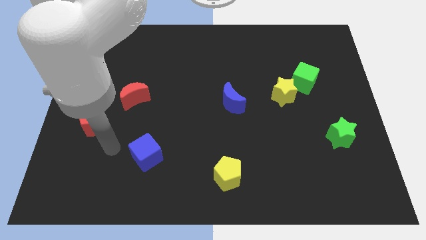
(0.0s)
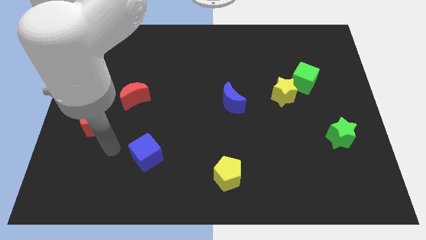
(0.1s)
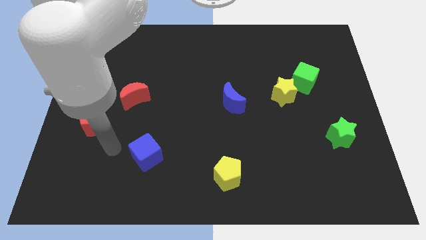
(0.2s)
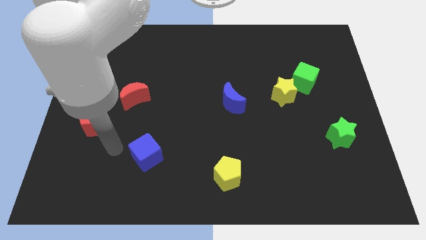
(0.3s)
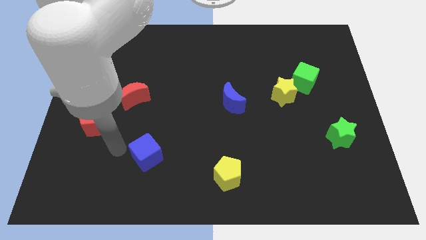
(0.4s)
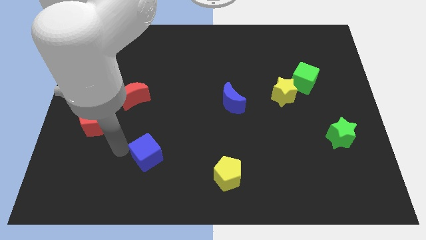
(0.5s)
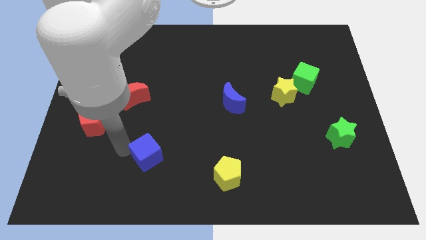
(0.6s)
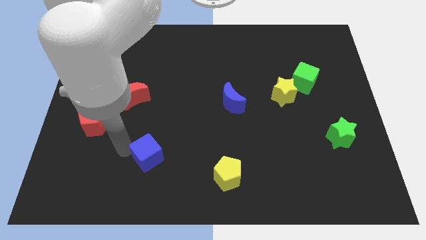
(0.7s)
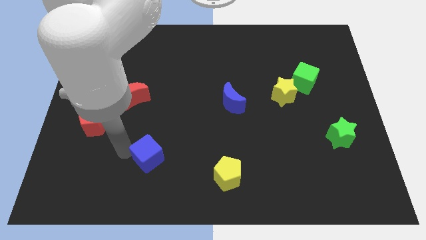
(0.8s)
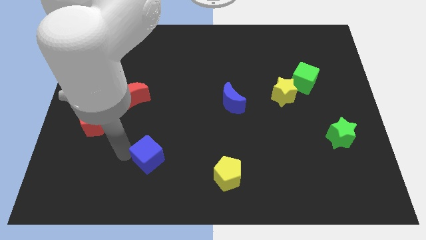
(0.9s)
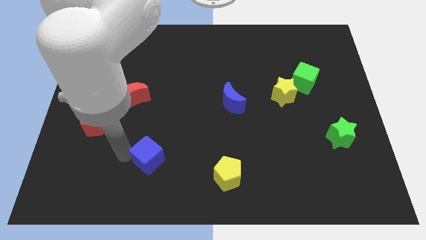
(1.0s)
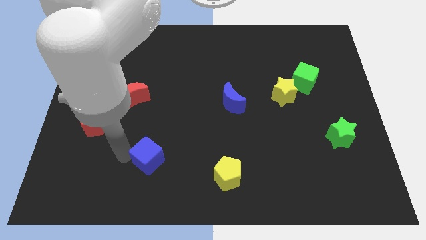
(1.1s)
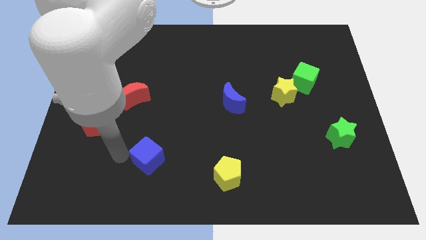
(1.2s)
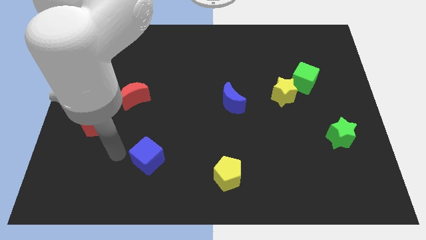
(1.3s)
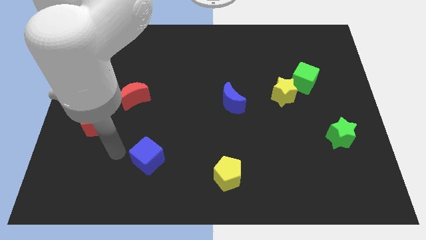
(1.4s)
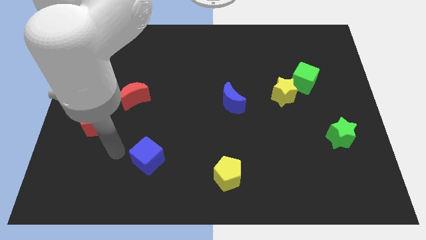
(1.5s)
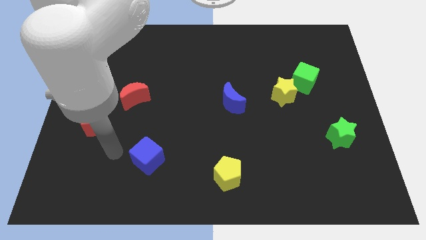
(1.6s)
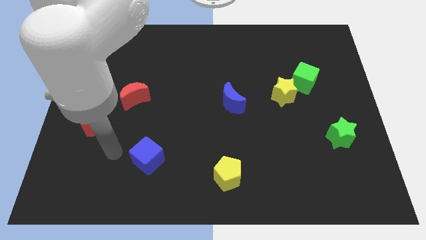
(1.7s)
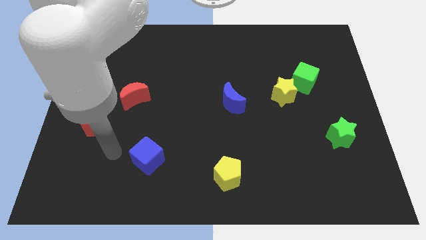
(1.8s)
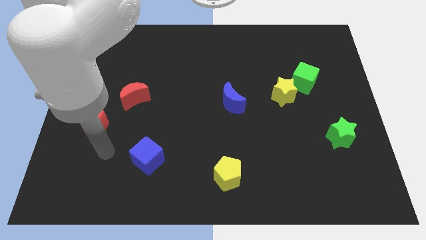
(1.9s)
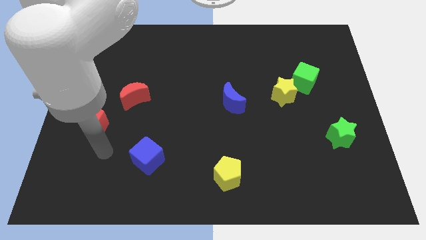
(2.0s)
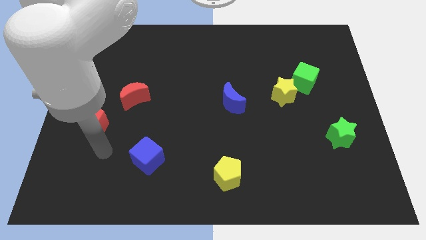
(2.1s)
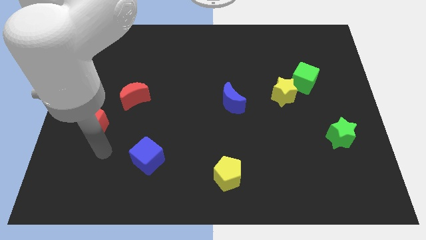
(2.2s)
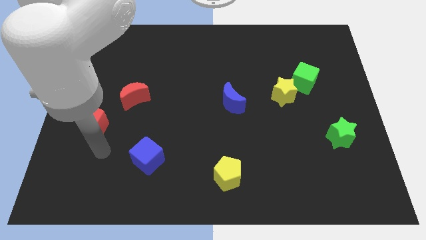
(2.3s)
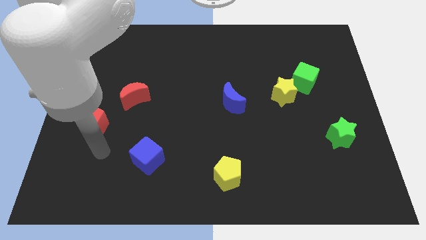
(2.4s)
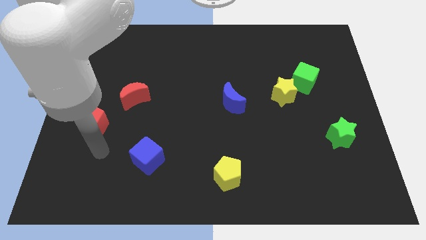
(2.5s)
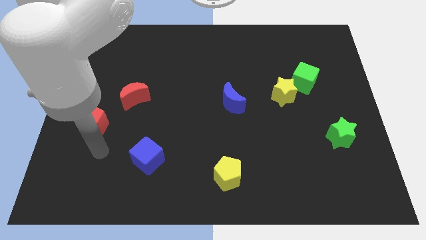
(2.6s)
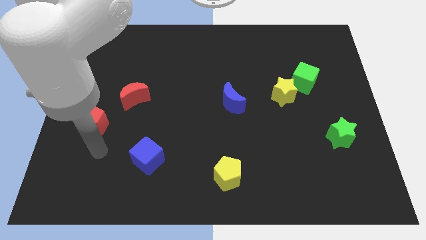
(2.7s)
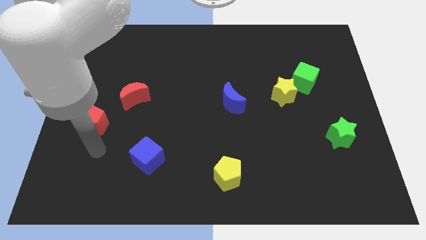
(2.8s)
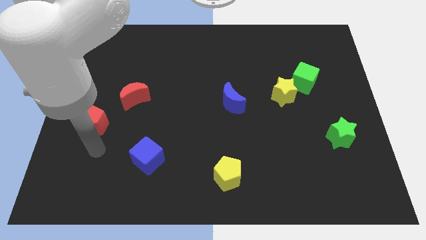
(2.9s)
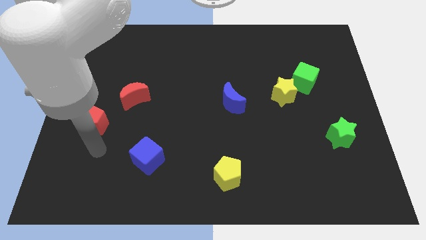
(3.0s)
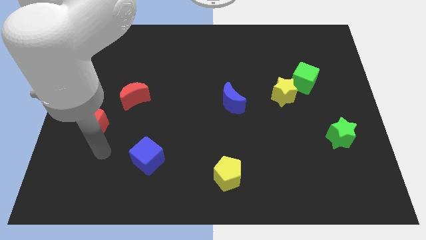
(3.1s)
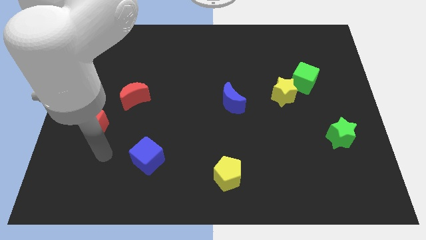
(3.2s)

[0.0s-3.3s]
move the blue cube slightly towards the right

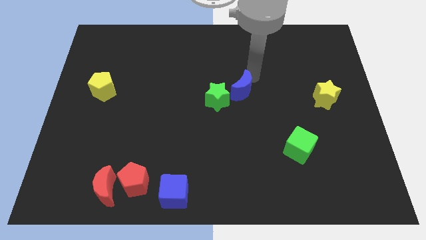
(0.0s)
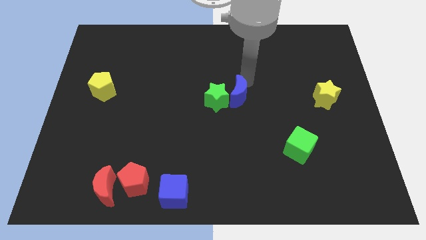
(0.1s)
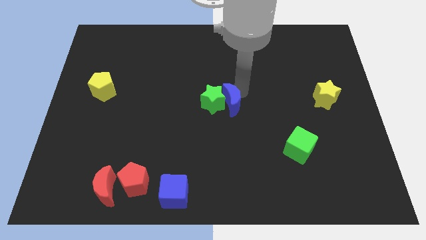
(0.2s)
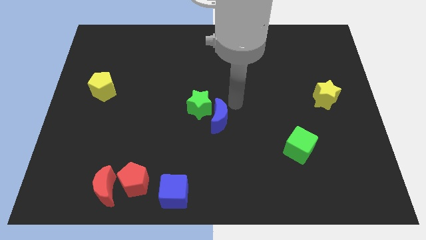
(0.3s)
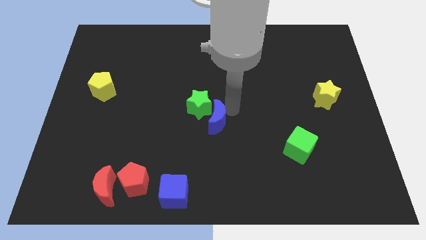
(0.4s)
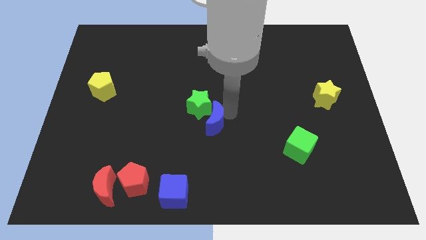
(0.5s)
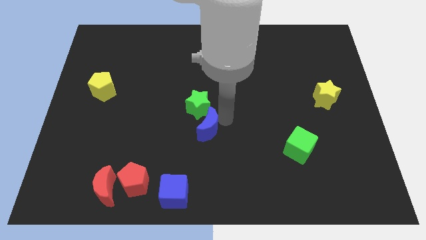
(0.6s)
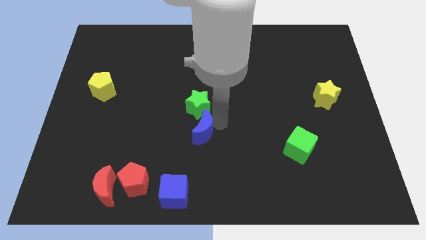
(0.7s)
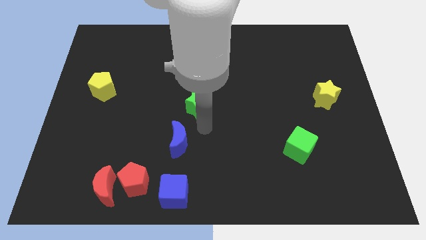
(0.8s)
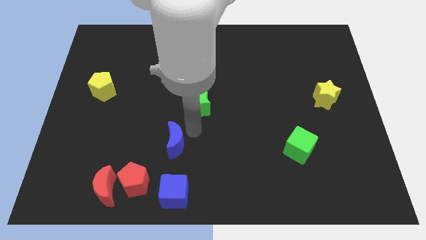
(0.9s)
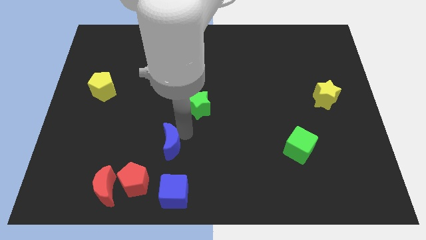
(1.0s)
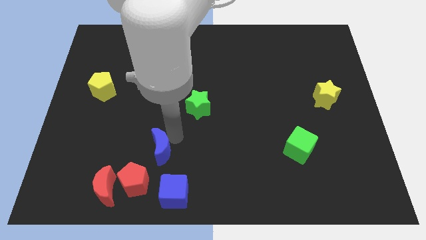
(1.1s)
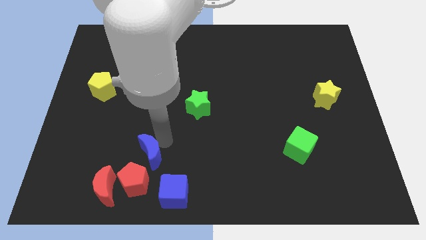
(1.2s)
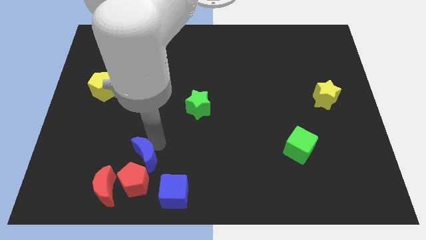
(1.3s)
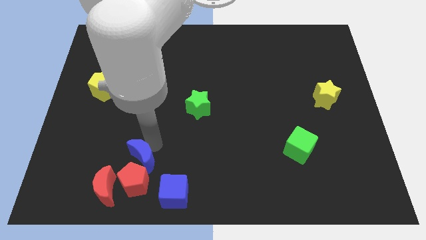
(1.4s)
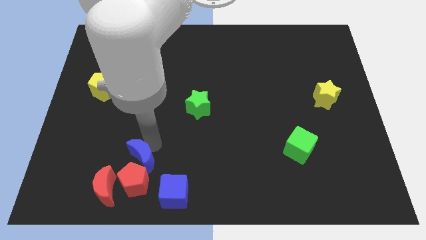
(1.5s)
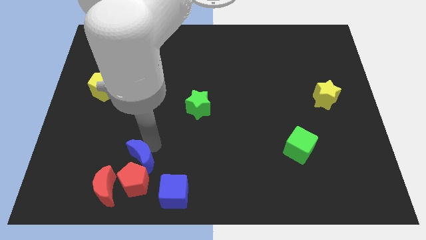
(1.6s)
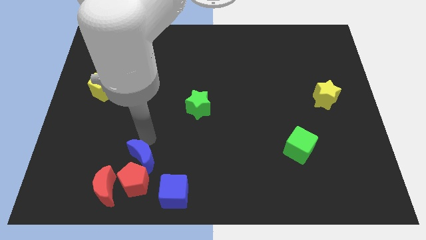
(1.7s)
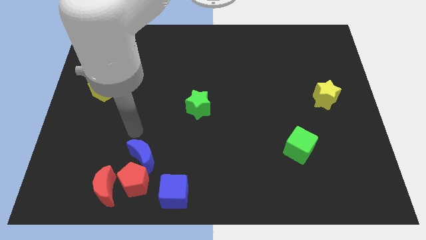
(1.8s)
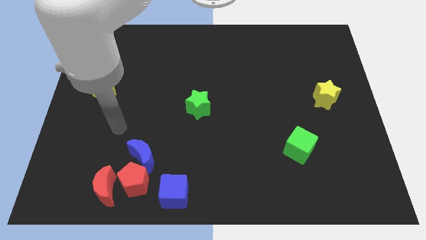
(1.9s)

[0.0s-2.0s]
move the blue crescent to the top of the red pentagon

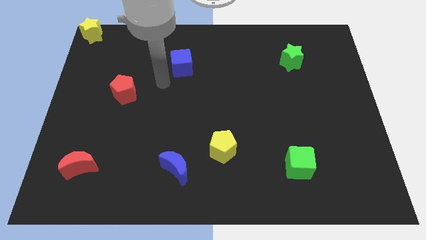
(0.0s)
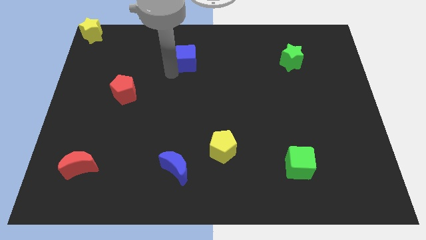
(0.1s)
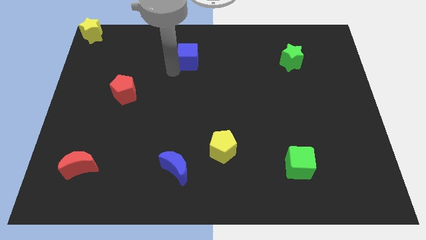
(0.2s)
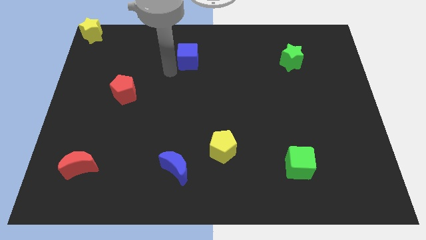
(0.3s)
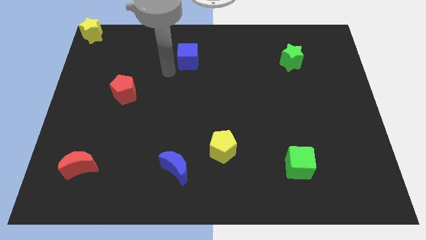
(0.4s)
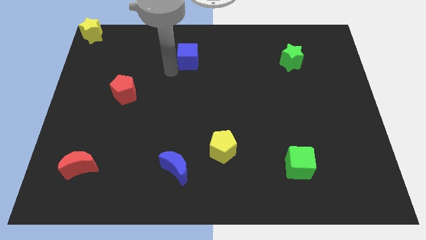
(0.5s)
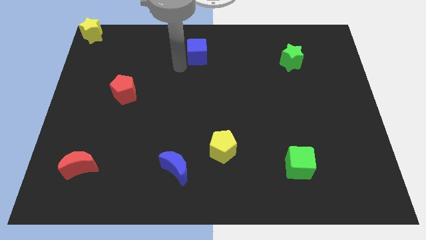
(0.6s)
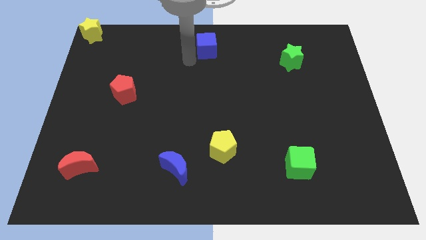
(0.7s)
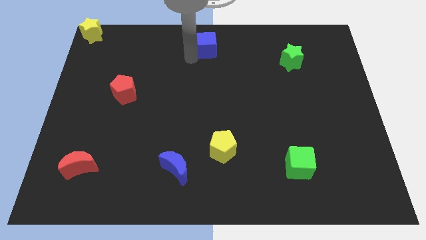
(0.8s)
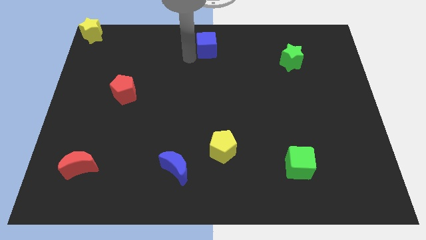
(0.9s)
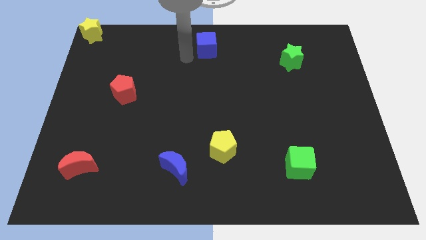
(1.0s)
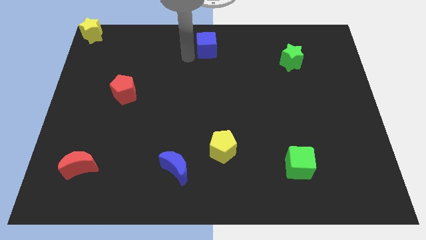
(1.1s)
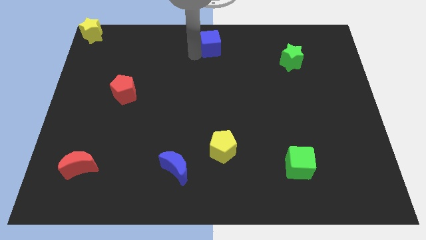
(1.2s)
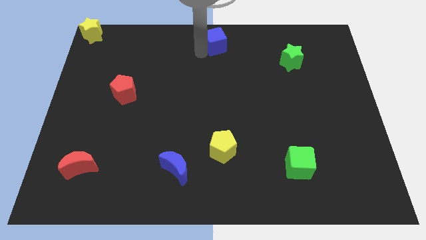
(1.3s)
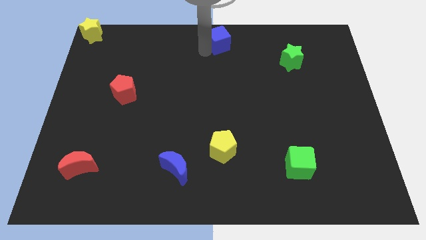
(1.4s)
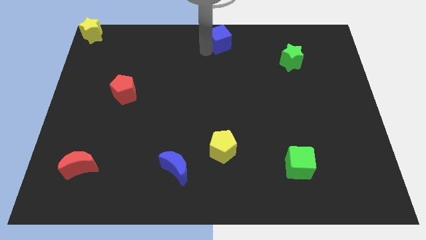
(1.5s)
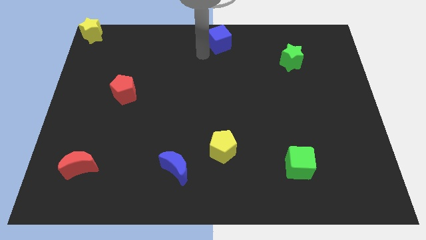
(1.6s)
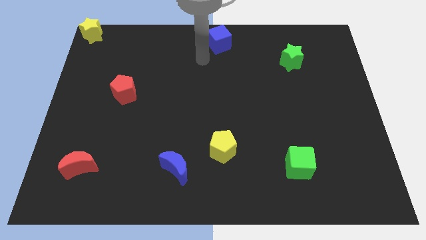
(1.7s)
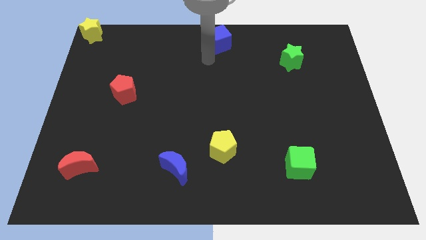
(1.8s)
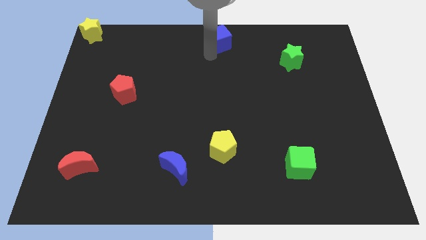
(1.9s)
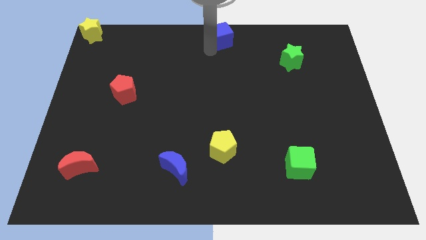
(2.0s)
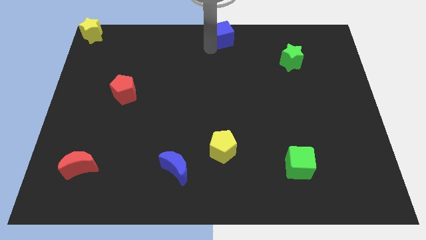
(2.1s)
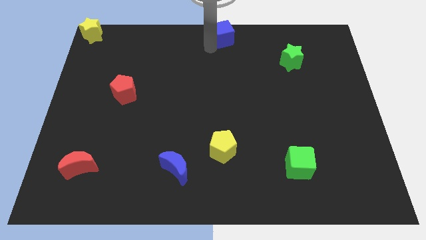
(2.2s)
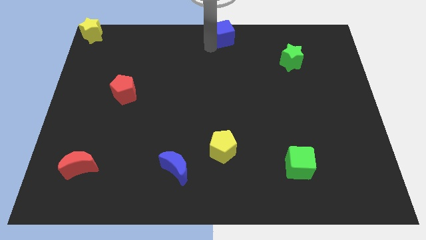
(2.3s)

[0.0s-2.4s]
move the blue cube above the yellow pentagon at the top side of the board

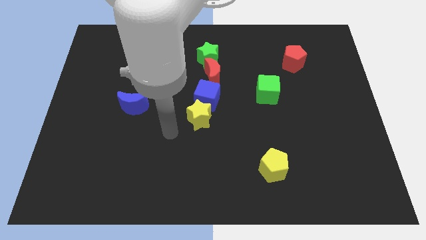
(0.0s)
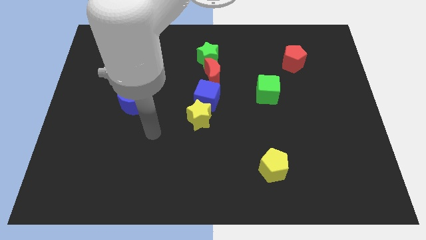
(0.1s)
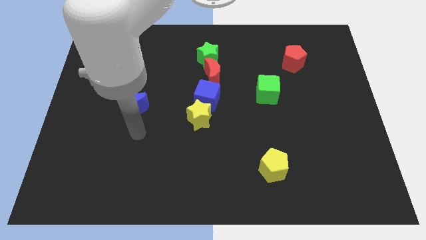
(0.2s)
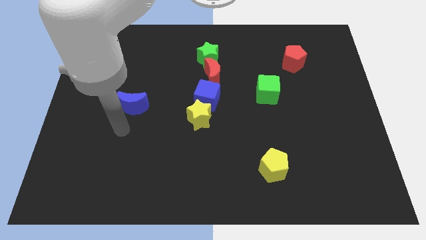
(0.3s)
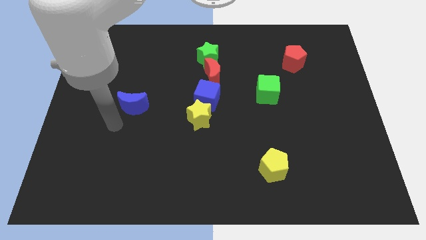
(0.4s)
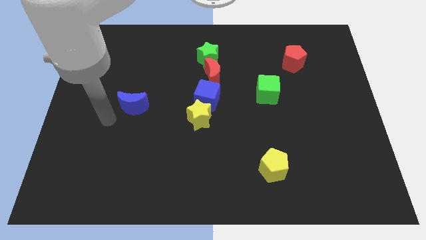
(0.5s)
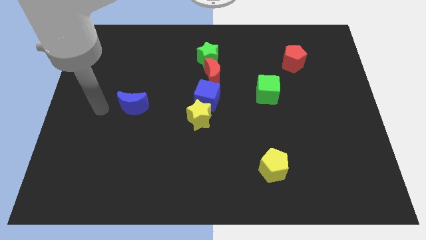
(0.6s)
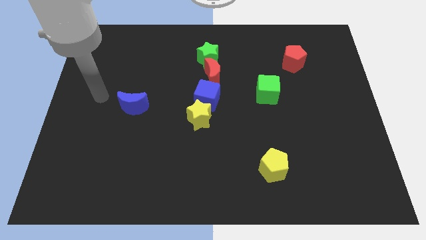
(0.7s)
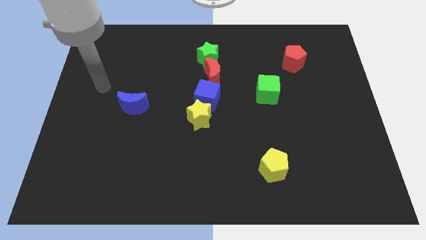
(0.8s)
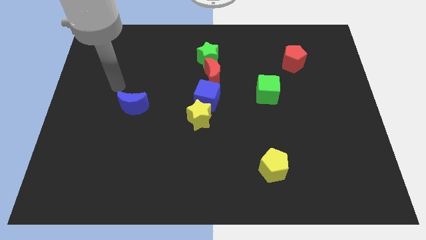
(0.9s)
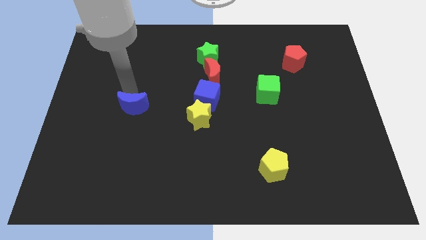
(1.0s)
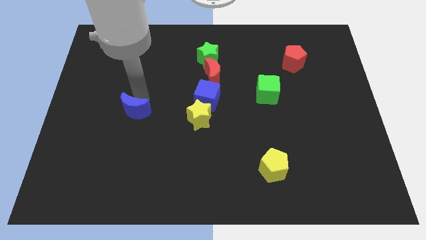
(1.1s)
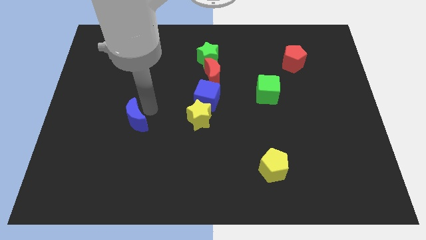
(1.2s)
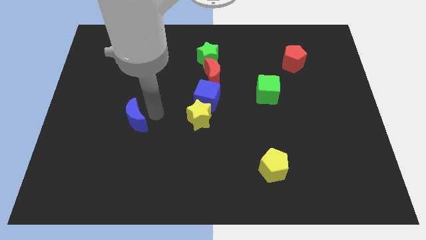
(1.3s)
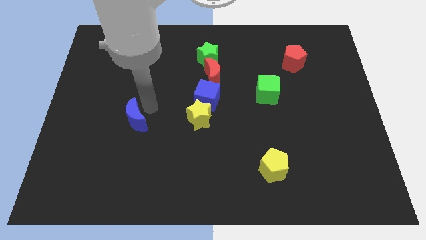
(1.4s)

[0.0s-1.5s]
move the blue moon to the left of the yellow star
